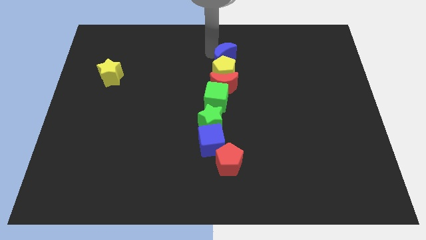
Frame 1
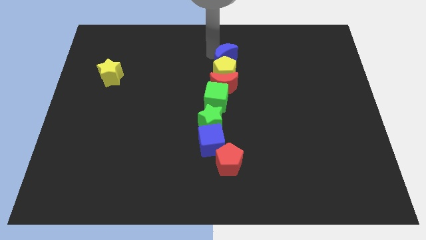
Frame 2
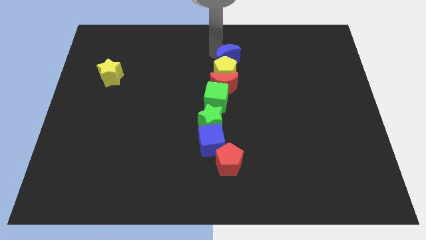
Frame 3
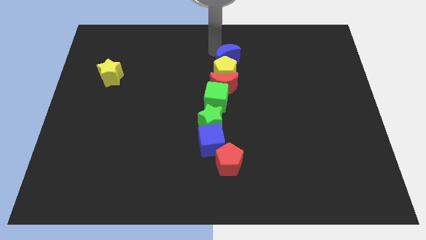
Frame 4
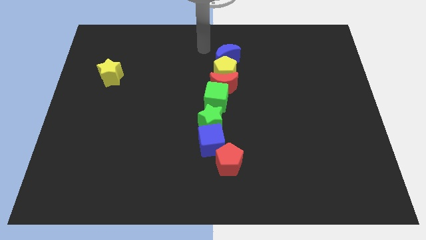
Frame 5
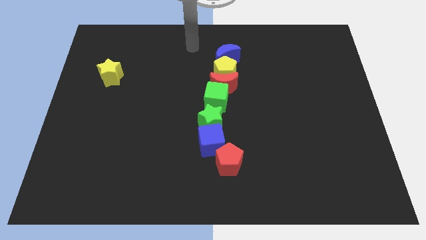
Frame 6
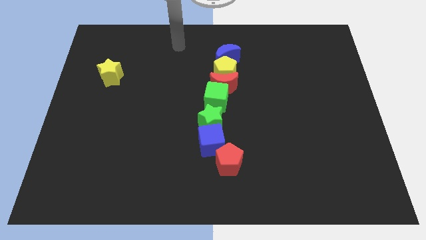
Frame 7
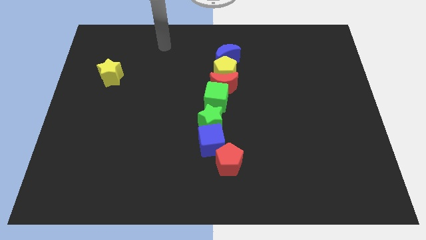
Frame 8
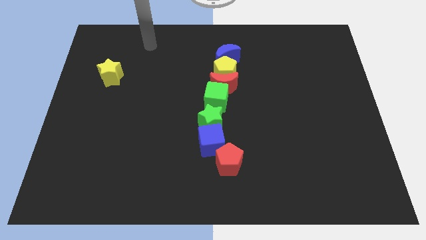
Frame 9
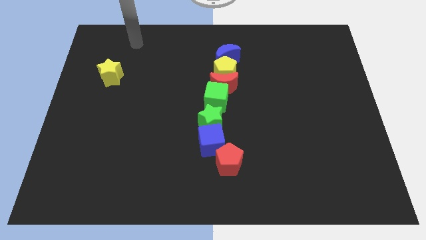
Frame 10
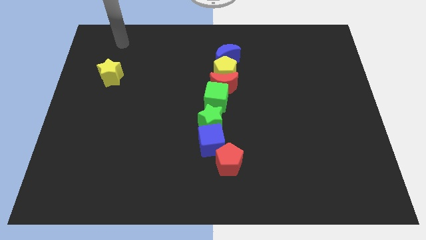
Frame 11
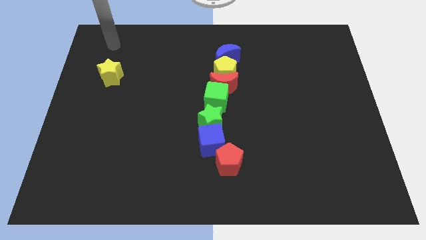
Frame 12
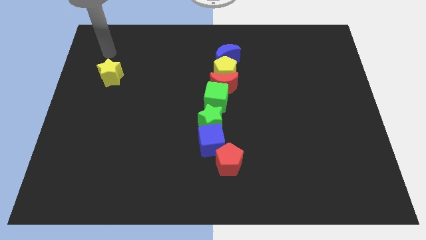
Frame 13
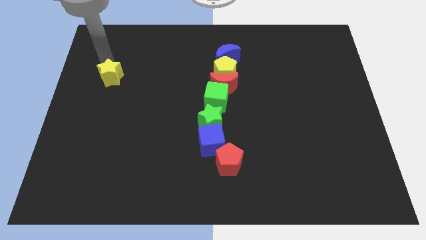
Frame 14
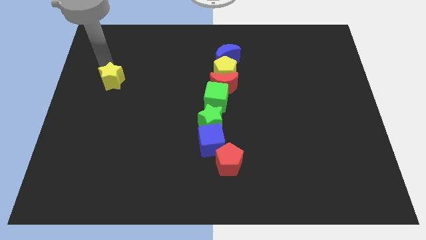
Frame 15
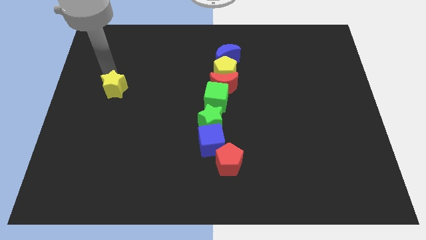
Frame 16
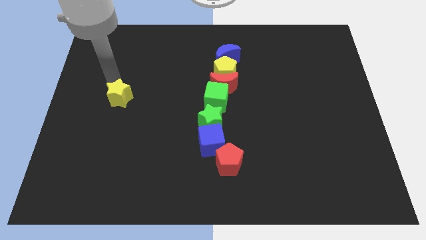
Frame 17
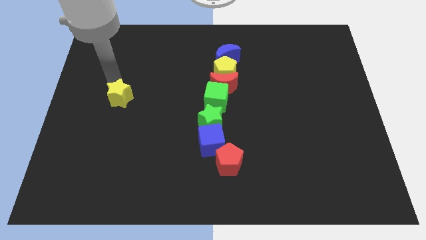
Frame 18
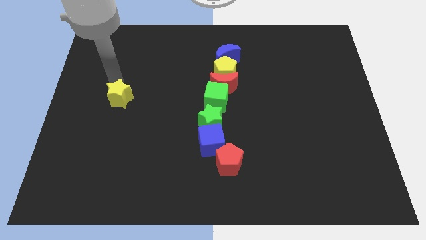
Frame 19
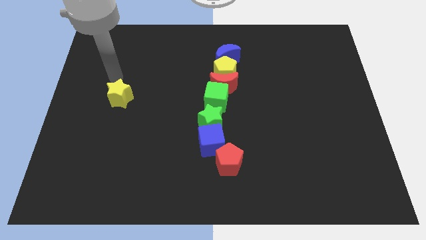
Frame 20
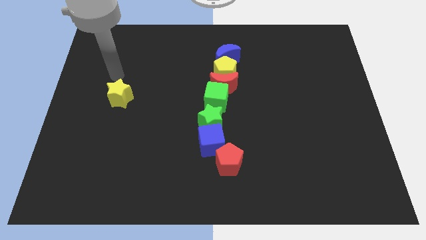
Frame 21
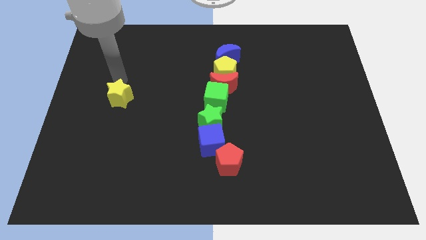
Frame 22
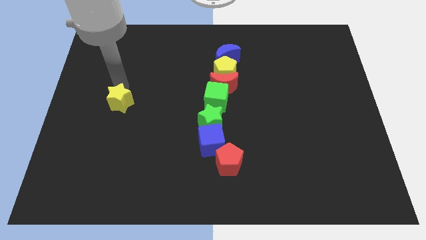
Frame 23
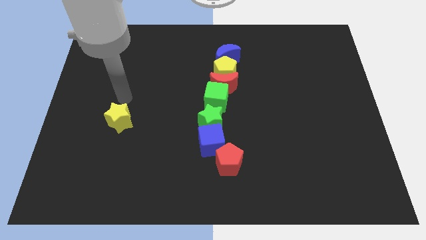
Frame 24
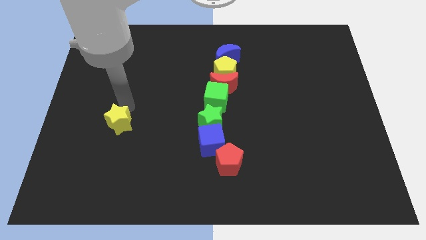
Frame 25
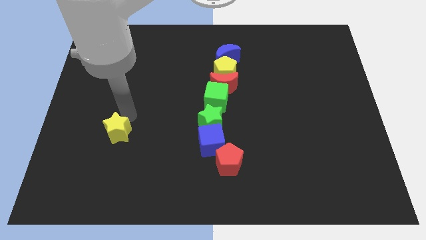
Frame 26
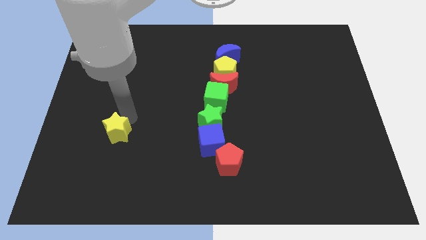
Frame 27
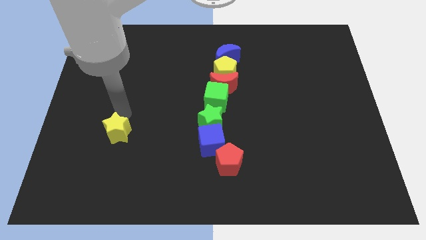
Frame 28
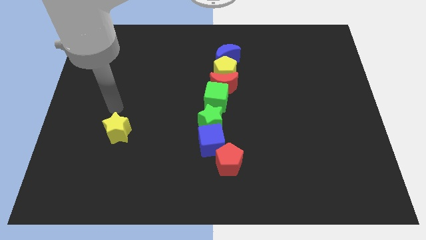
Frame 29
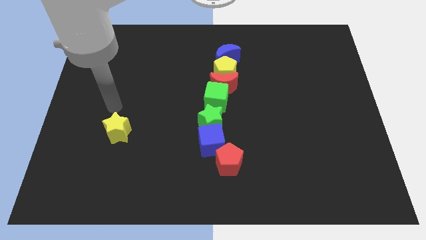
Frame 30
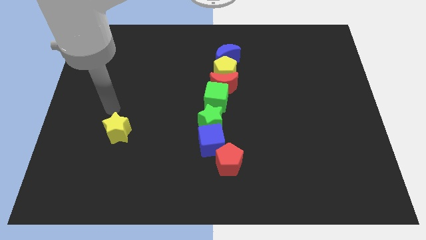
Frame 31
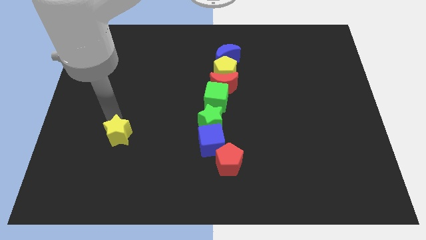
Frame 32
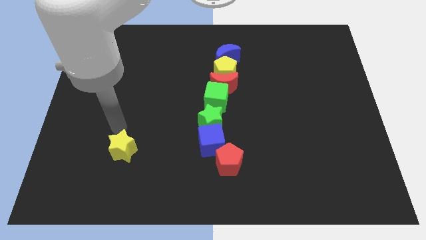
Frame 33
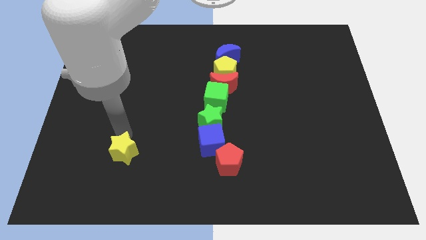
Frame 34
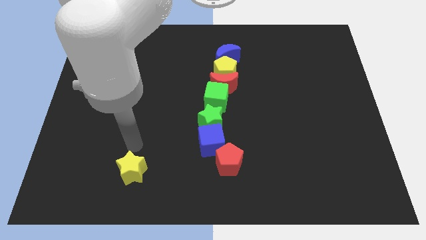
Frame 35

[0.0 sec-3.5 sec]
push the yellow star parallel to the left of blue cube

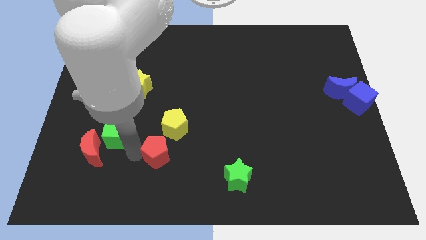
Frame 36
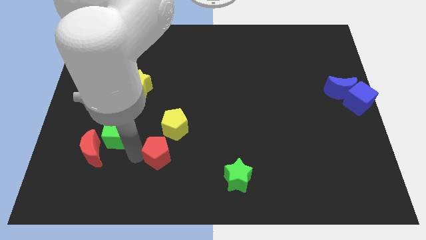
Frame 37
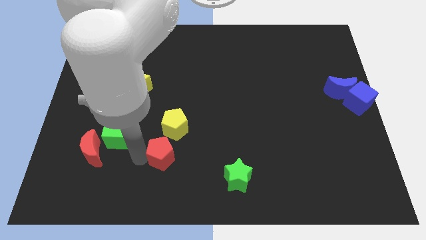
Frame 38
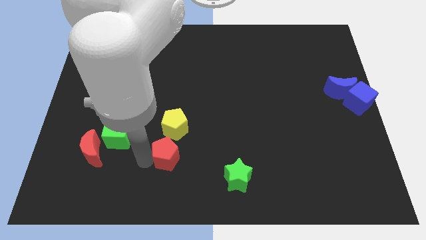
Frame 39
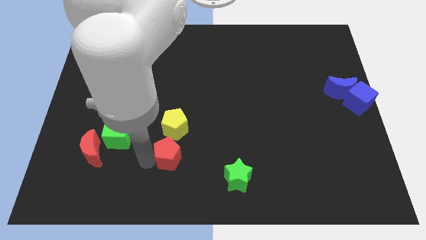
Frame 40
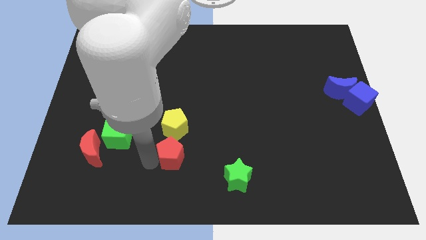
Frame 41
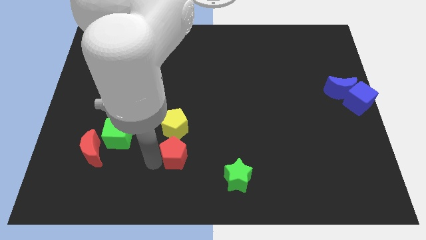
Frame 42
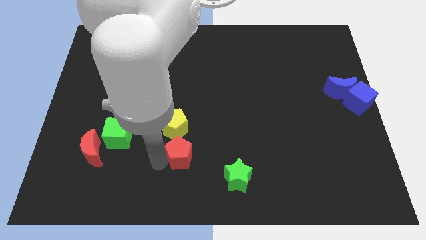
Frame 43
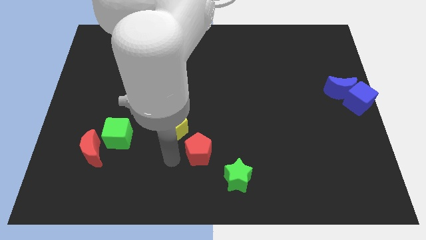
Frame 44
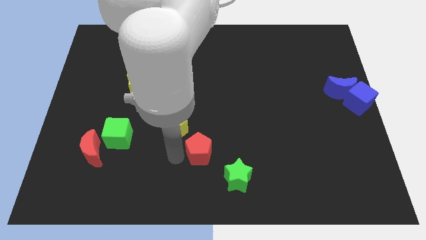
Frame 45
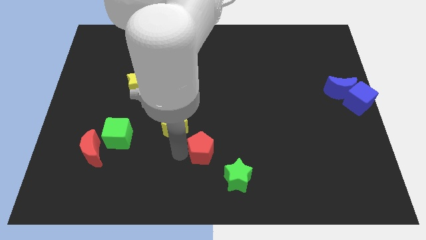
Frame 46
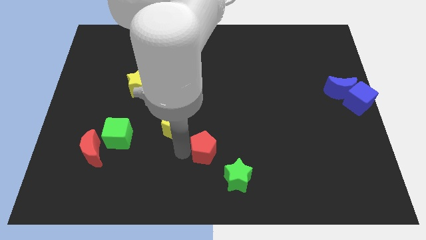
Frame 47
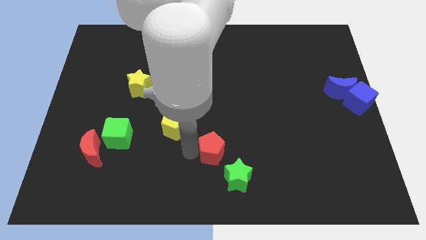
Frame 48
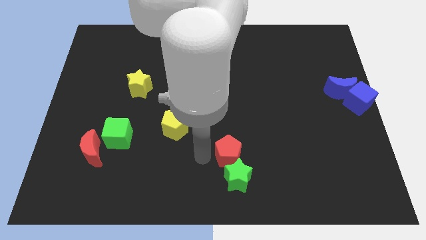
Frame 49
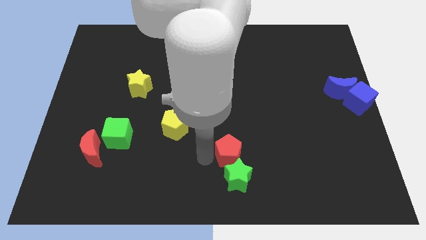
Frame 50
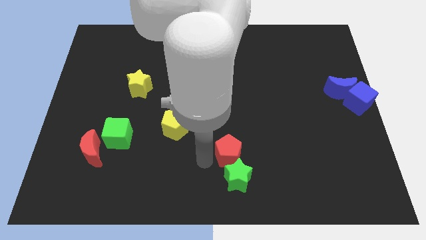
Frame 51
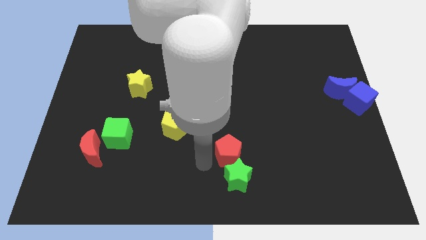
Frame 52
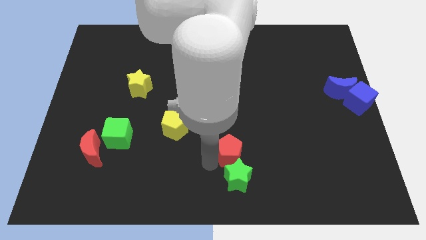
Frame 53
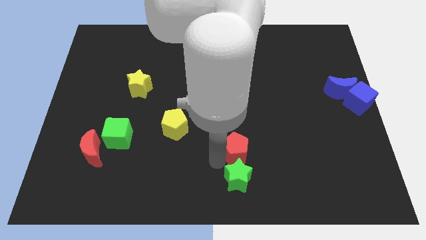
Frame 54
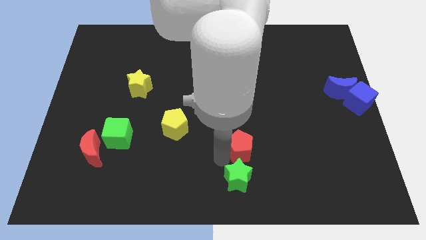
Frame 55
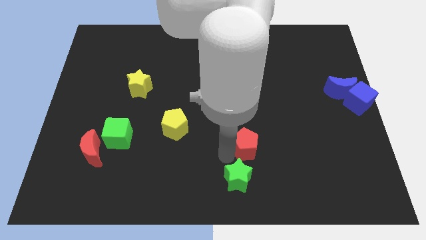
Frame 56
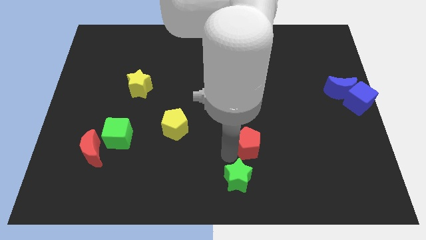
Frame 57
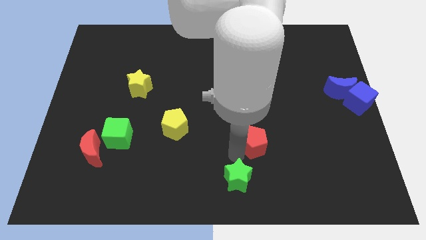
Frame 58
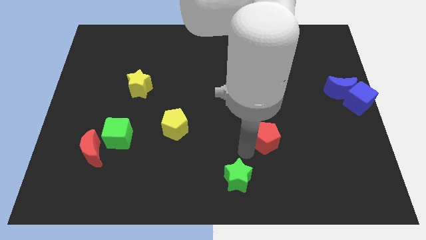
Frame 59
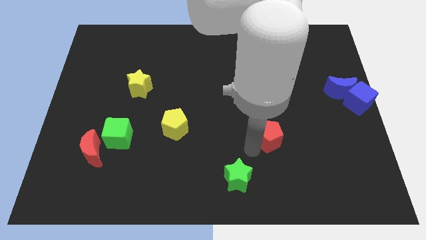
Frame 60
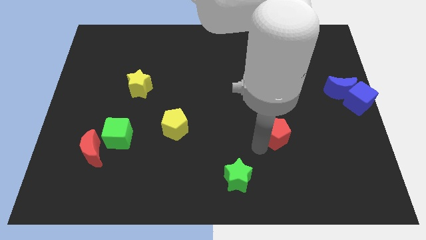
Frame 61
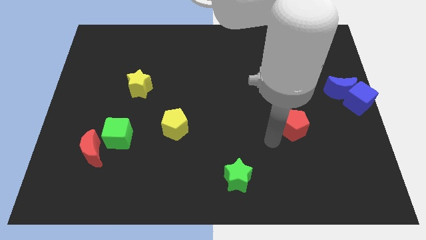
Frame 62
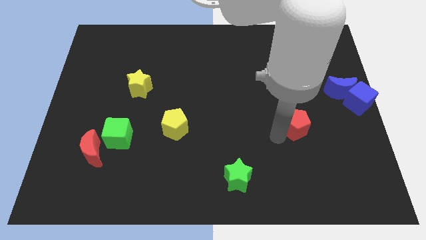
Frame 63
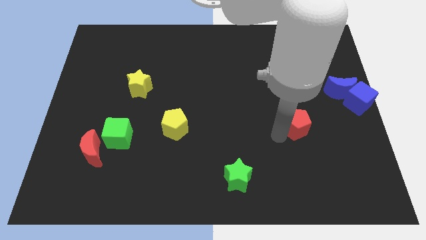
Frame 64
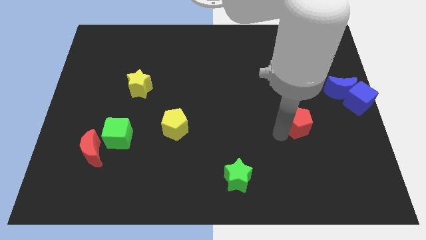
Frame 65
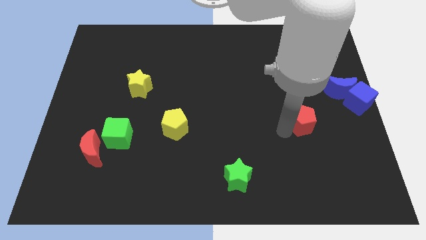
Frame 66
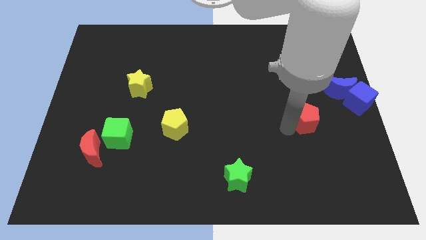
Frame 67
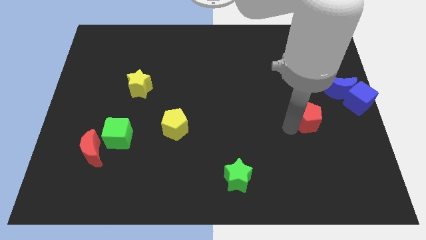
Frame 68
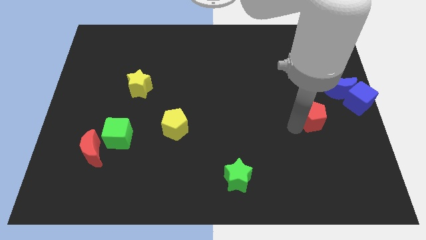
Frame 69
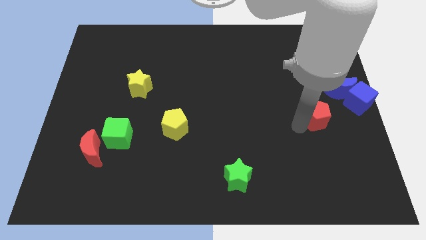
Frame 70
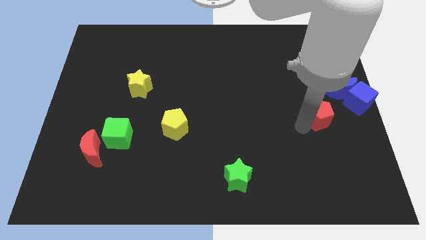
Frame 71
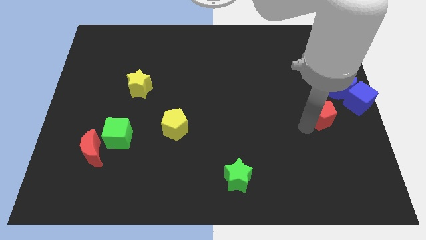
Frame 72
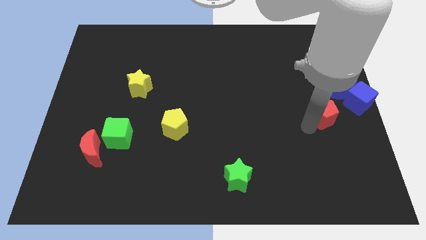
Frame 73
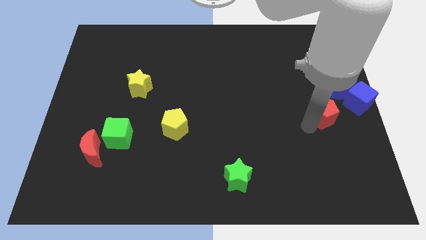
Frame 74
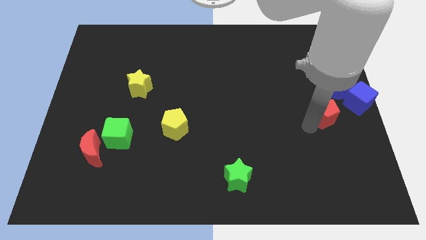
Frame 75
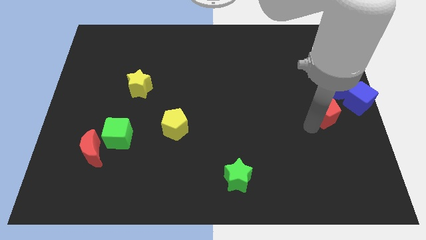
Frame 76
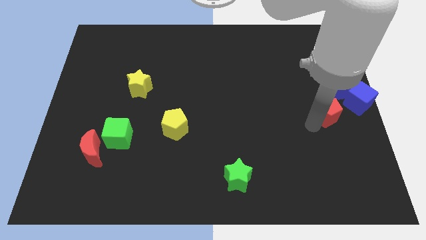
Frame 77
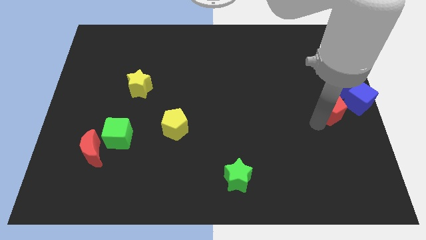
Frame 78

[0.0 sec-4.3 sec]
move the red pentagon to the right center of the board

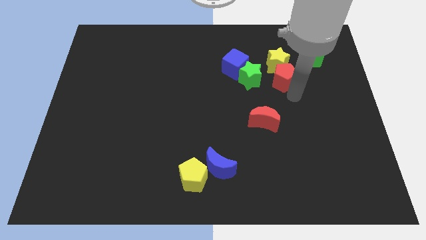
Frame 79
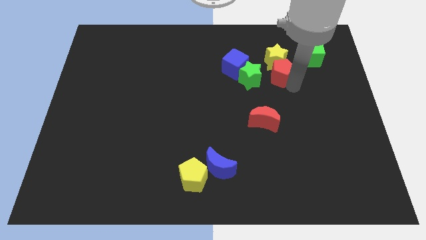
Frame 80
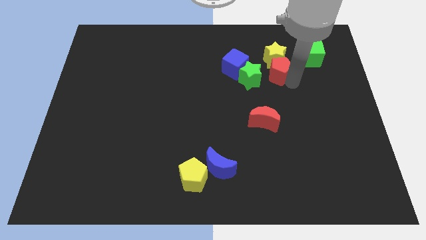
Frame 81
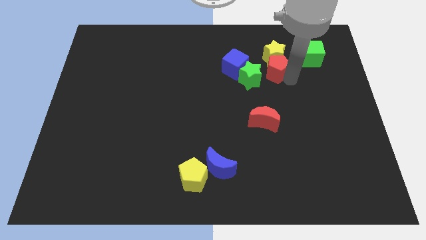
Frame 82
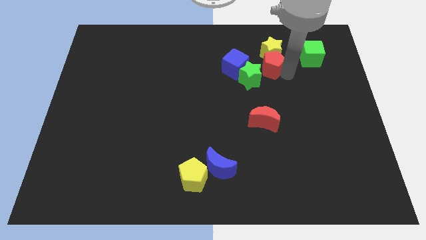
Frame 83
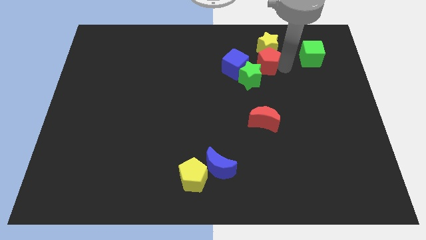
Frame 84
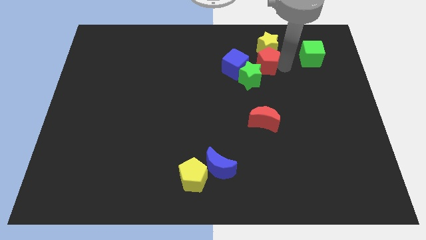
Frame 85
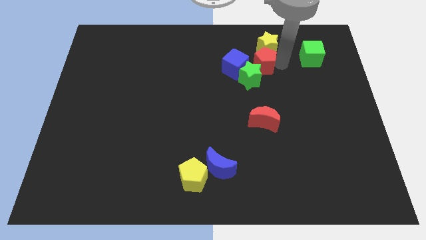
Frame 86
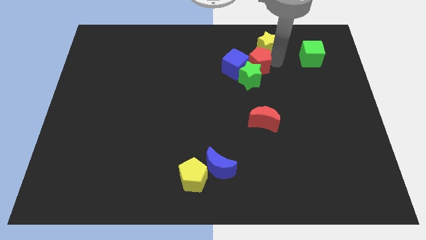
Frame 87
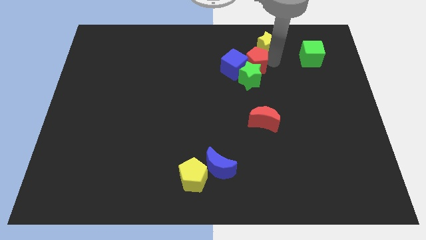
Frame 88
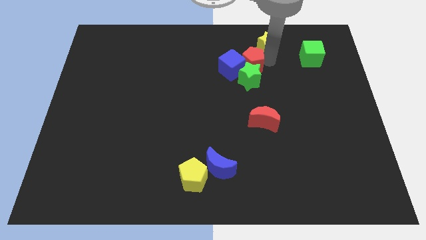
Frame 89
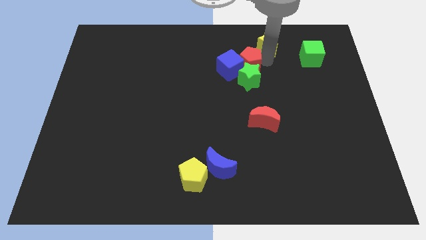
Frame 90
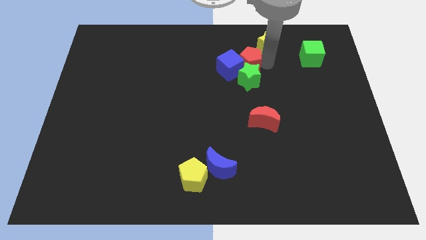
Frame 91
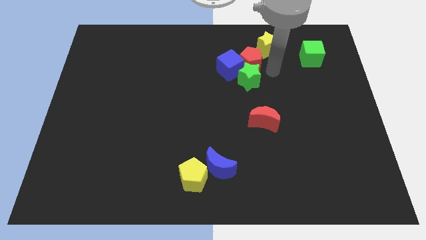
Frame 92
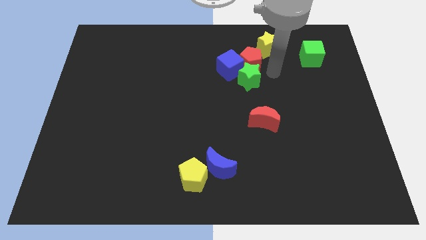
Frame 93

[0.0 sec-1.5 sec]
push the red pentagon into the blue cube
